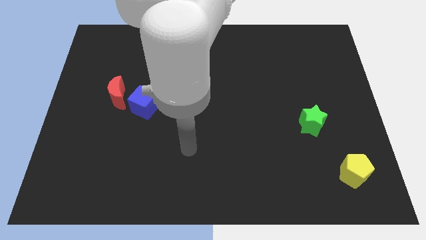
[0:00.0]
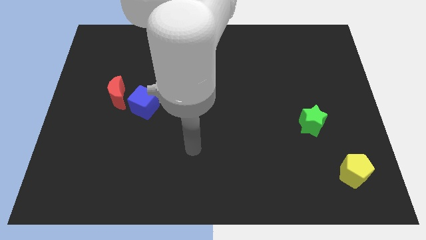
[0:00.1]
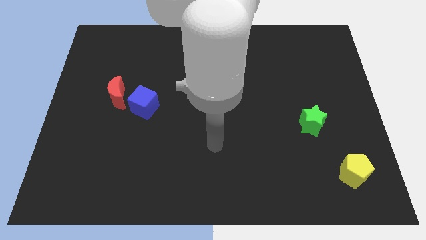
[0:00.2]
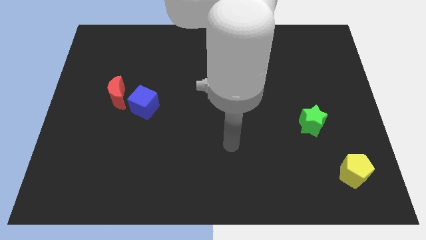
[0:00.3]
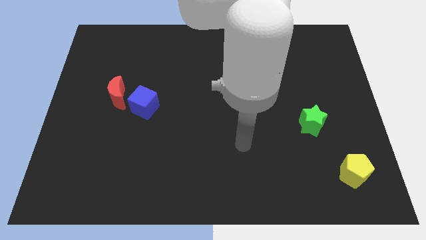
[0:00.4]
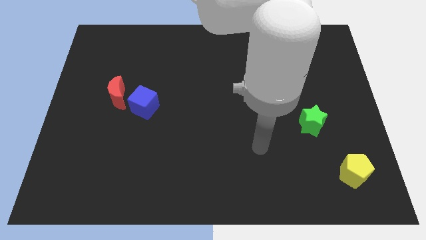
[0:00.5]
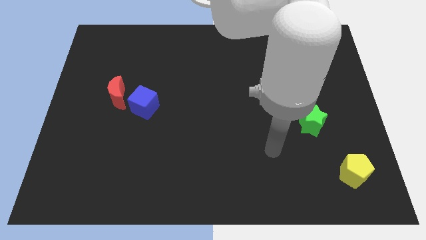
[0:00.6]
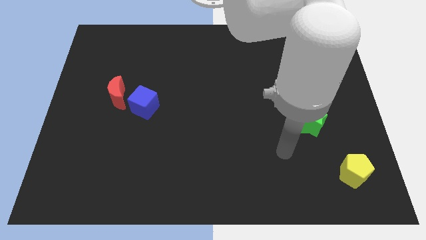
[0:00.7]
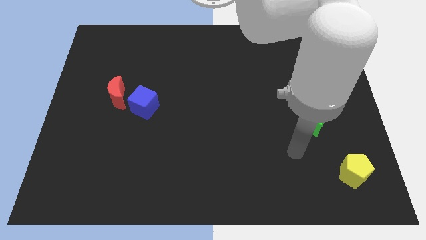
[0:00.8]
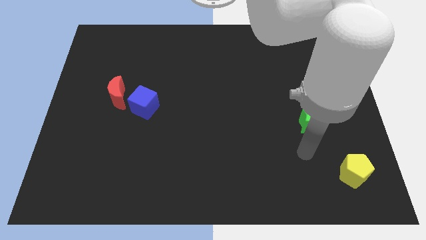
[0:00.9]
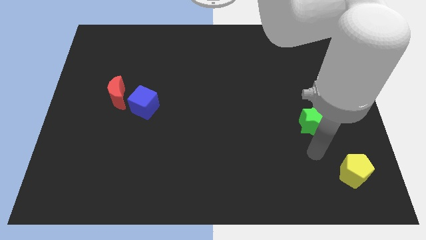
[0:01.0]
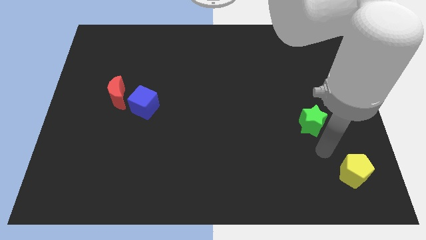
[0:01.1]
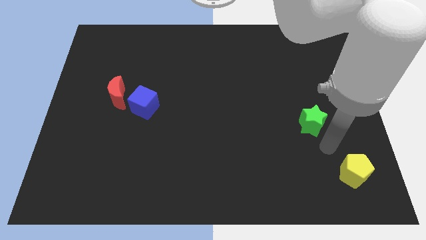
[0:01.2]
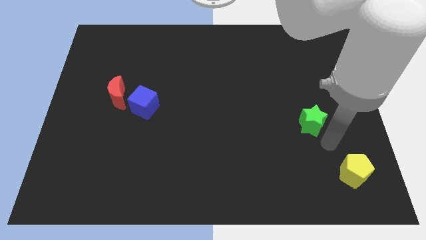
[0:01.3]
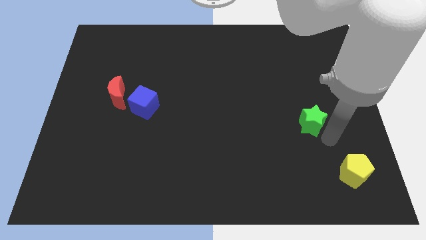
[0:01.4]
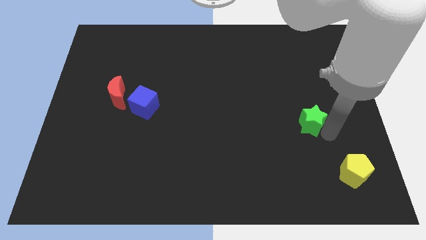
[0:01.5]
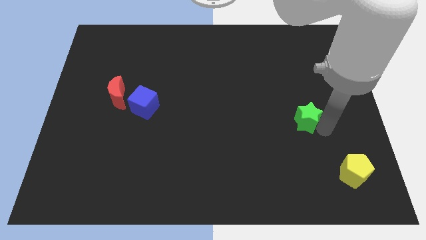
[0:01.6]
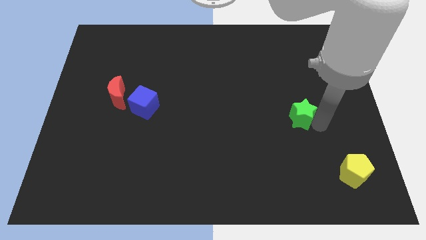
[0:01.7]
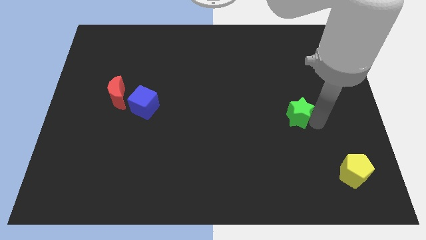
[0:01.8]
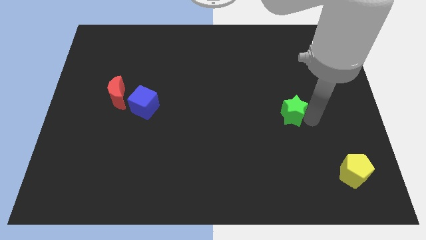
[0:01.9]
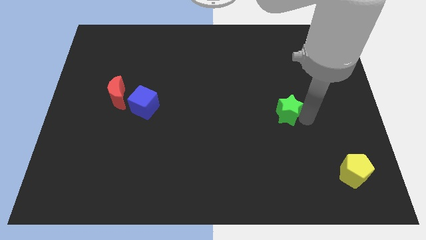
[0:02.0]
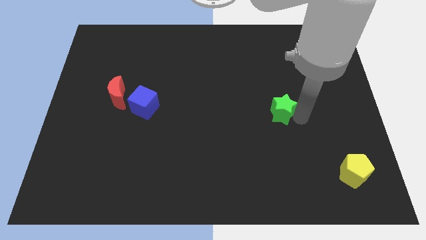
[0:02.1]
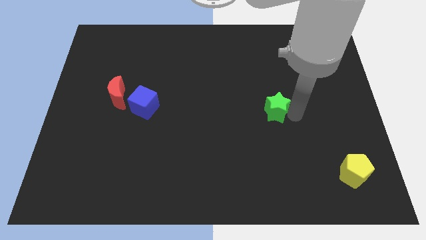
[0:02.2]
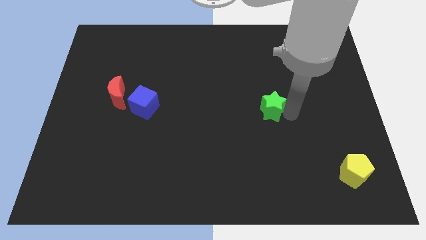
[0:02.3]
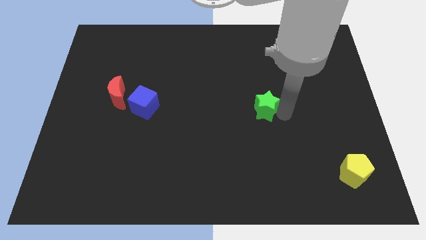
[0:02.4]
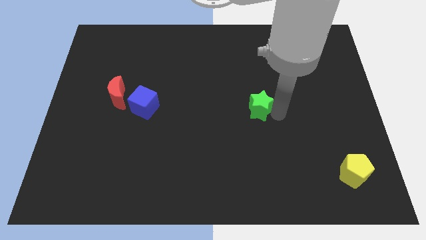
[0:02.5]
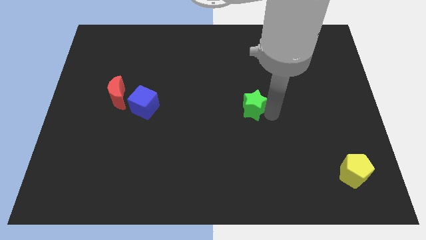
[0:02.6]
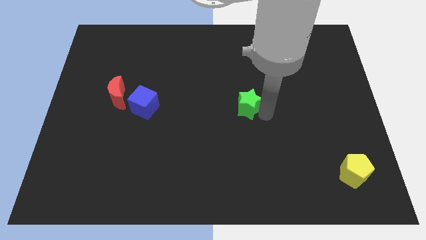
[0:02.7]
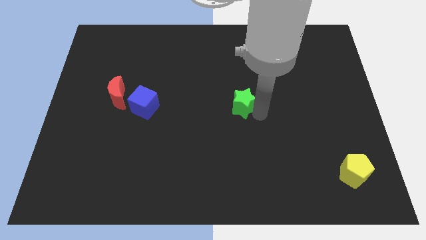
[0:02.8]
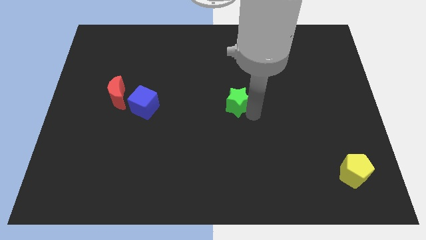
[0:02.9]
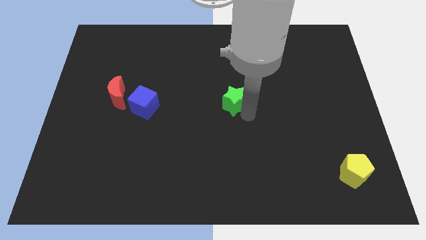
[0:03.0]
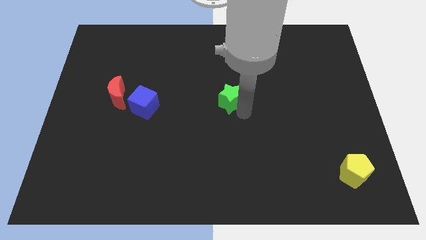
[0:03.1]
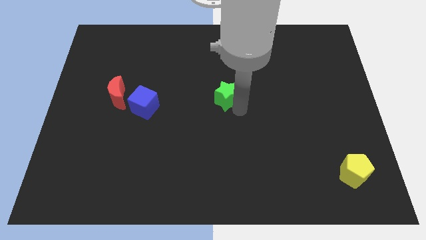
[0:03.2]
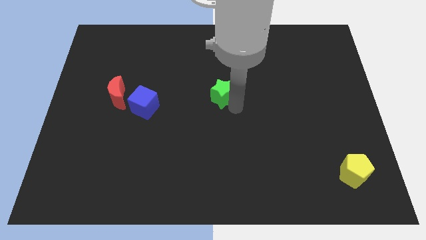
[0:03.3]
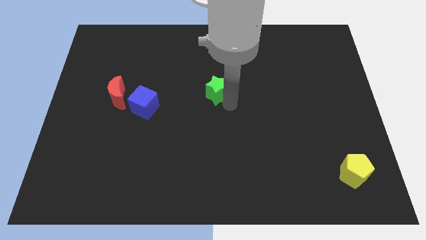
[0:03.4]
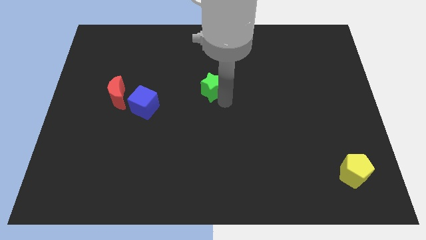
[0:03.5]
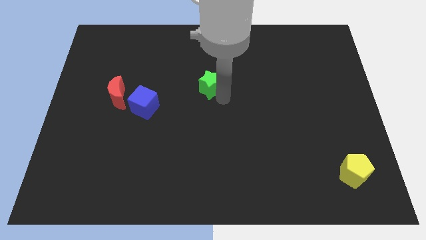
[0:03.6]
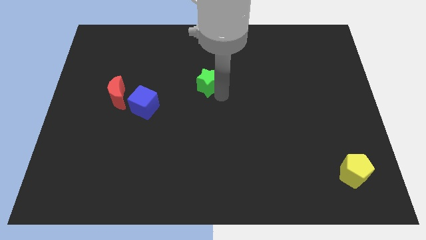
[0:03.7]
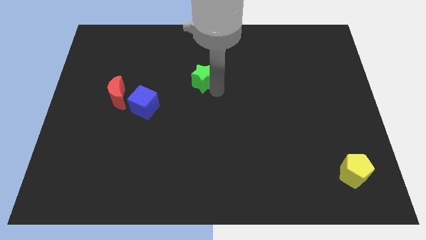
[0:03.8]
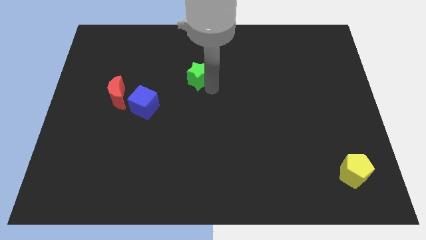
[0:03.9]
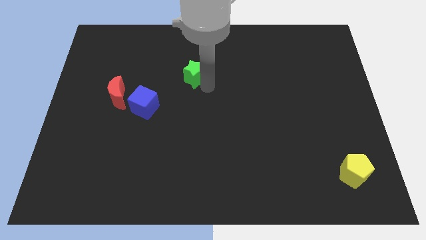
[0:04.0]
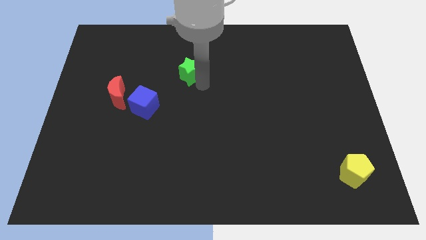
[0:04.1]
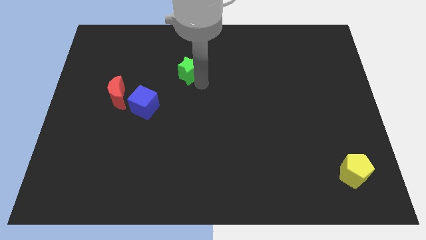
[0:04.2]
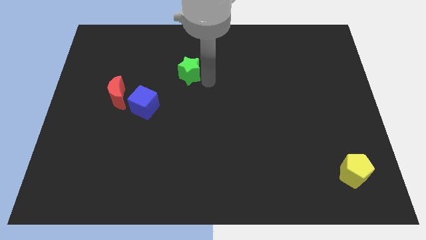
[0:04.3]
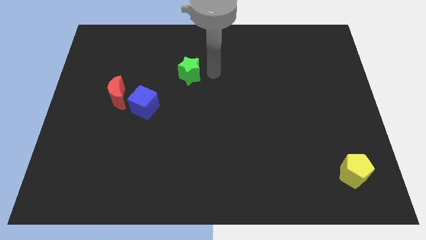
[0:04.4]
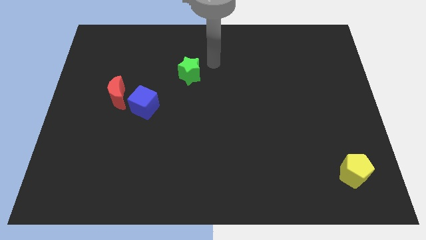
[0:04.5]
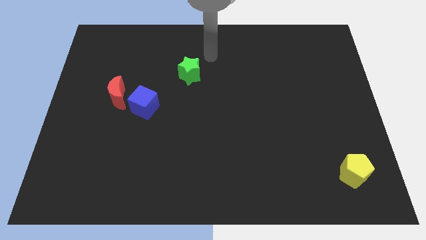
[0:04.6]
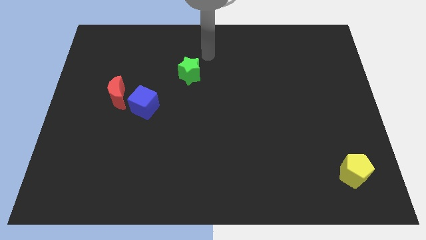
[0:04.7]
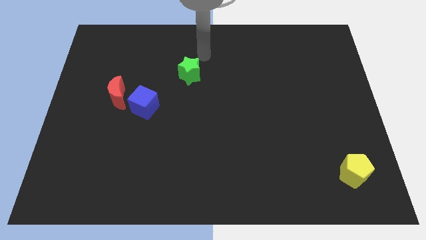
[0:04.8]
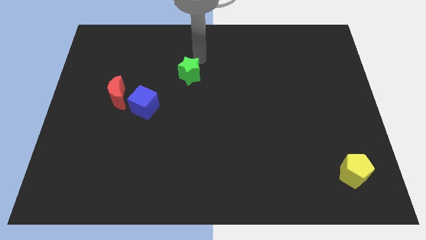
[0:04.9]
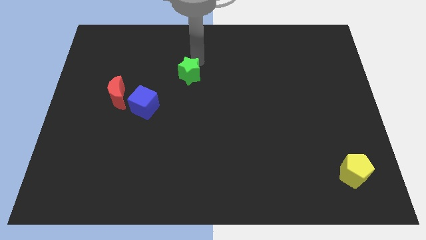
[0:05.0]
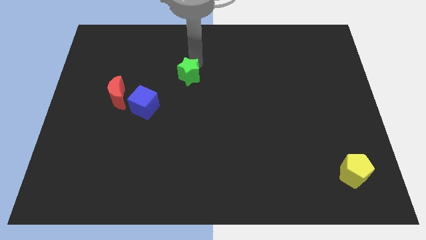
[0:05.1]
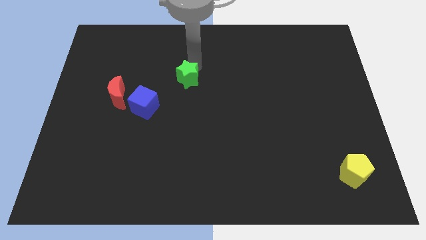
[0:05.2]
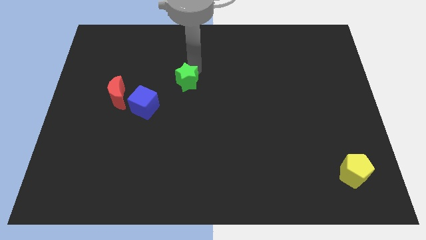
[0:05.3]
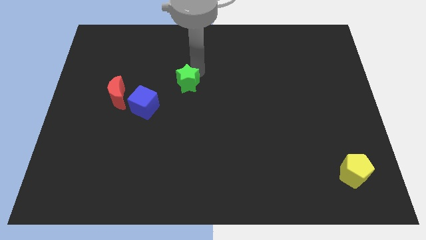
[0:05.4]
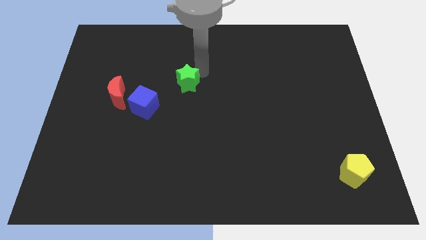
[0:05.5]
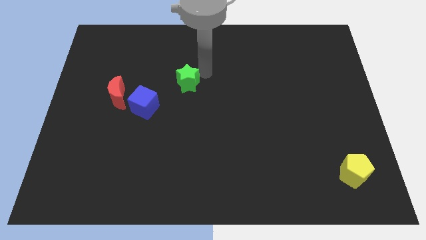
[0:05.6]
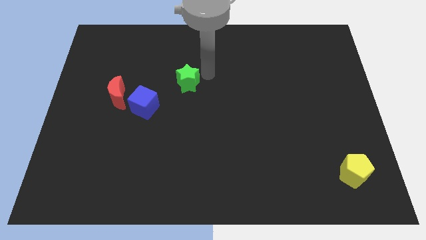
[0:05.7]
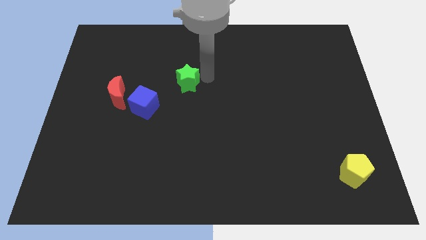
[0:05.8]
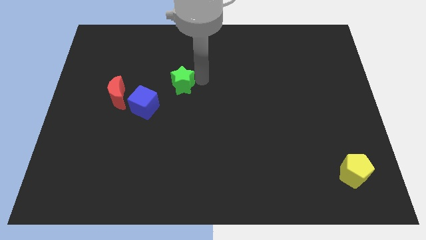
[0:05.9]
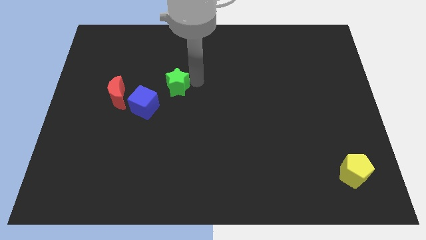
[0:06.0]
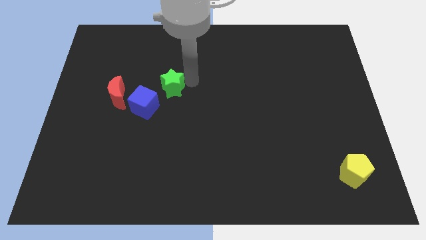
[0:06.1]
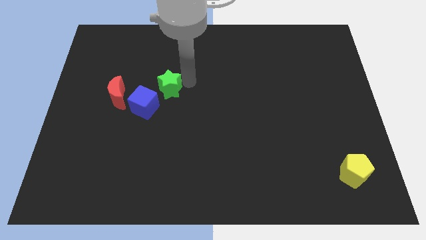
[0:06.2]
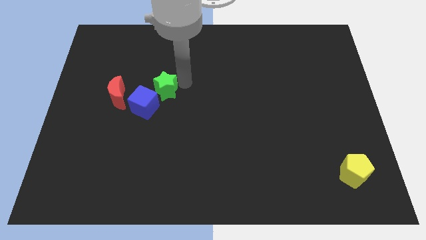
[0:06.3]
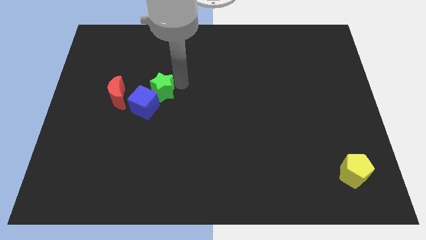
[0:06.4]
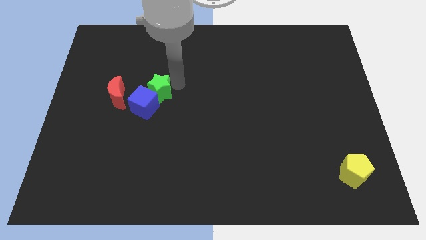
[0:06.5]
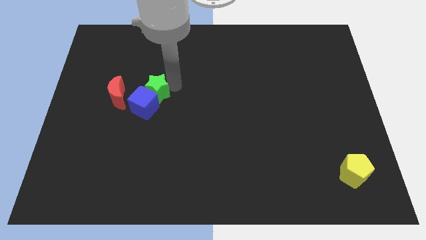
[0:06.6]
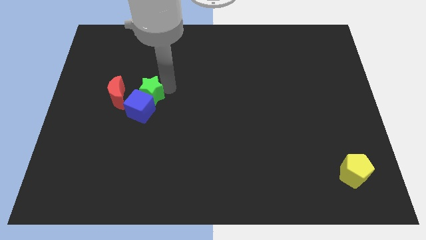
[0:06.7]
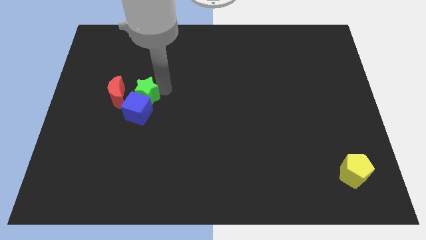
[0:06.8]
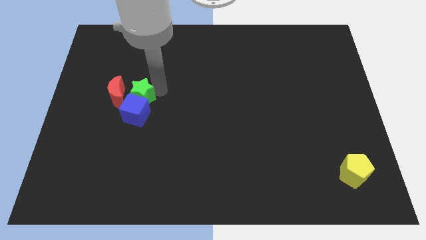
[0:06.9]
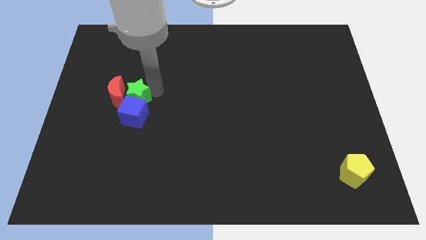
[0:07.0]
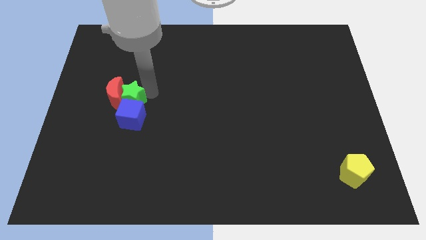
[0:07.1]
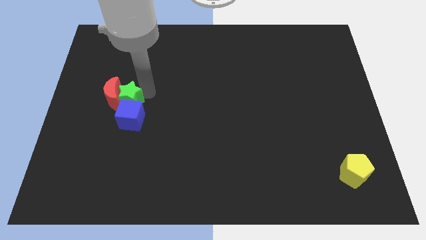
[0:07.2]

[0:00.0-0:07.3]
push the star close to the red block

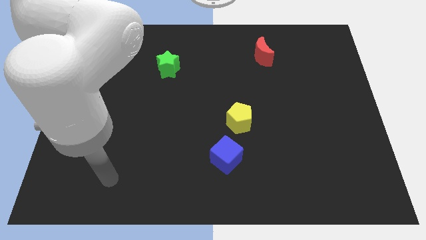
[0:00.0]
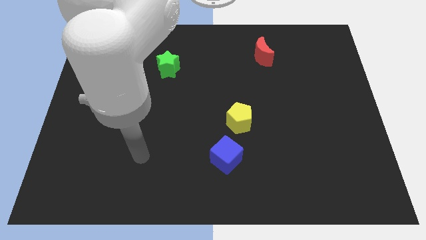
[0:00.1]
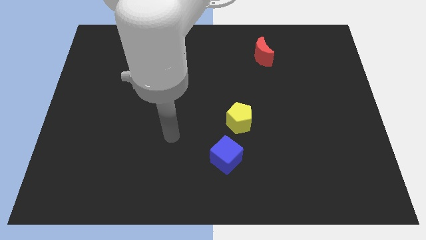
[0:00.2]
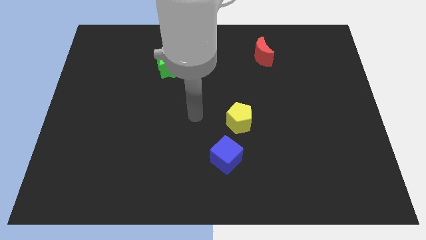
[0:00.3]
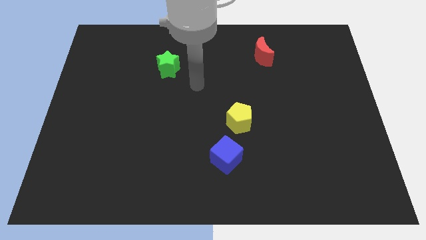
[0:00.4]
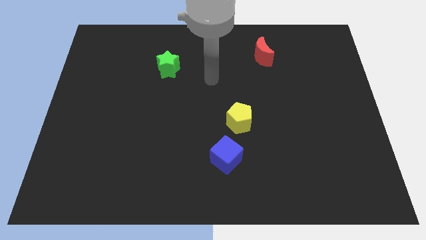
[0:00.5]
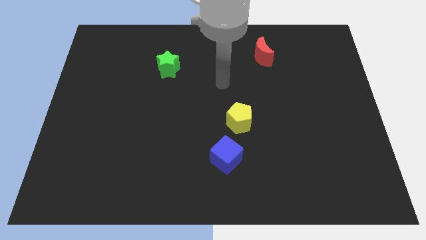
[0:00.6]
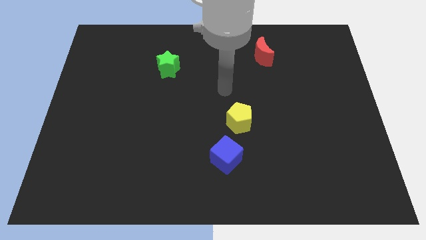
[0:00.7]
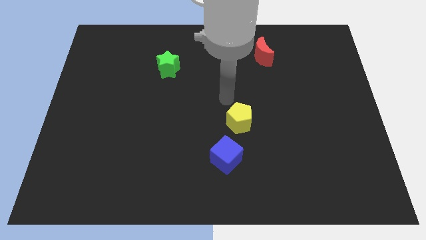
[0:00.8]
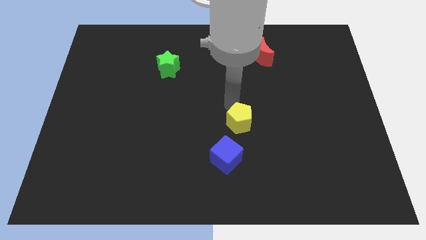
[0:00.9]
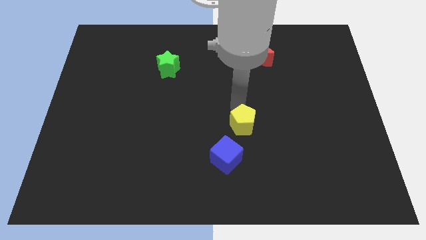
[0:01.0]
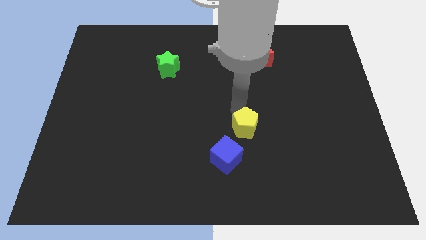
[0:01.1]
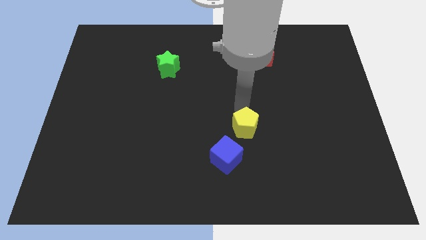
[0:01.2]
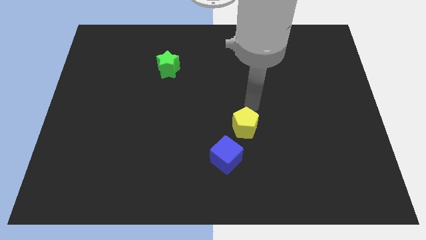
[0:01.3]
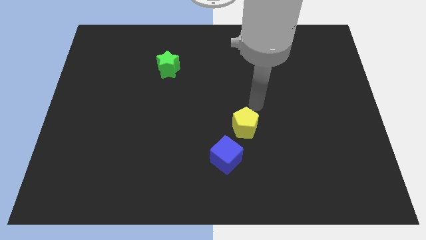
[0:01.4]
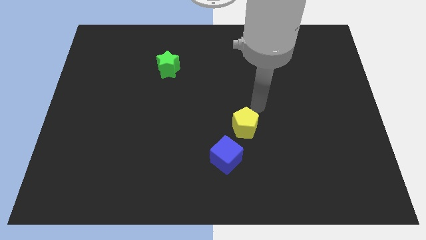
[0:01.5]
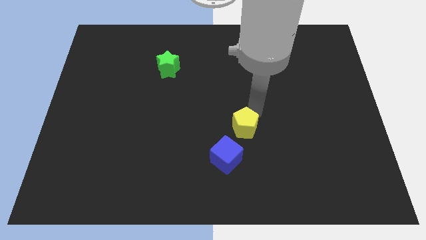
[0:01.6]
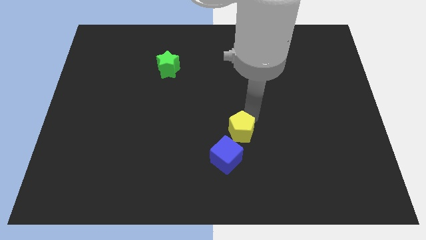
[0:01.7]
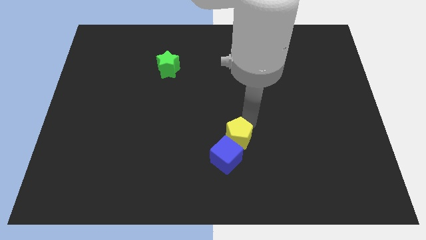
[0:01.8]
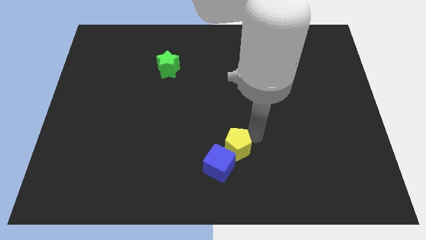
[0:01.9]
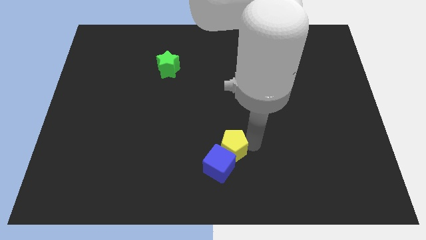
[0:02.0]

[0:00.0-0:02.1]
slide the pentagon close to the blue cube
